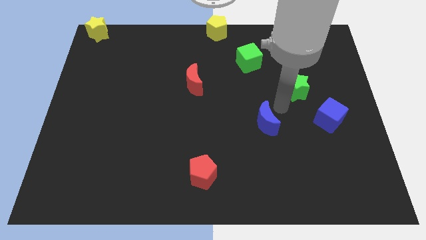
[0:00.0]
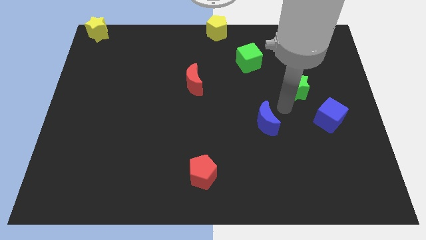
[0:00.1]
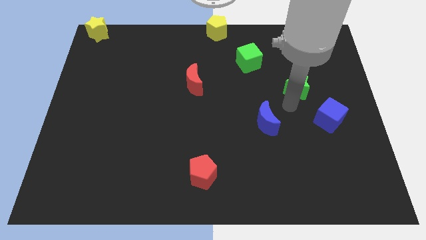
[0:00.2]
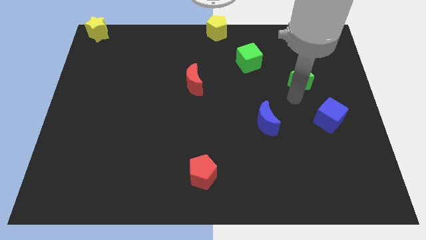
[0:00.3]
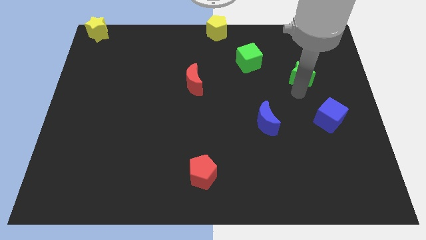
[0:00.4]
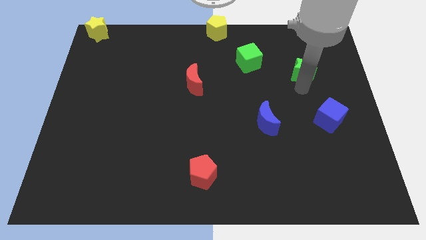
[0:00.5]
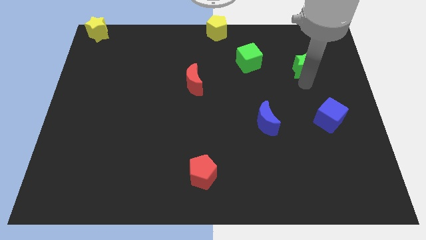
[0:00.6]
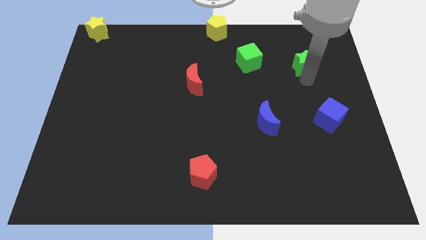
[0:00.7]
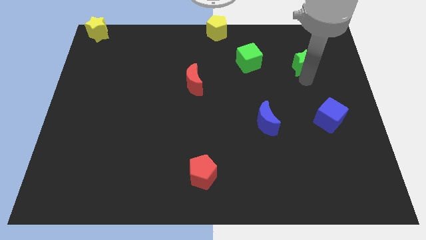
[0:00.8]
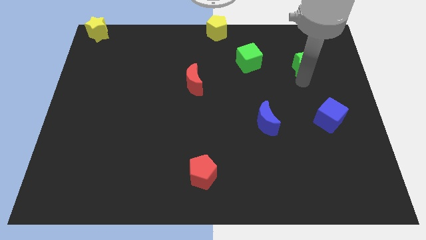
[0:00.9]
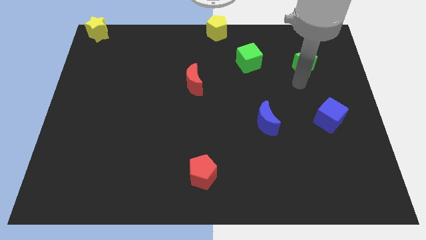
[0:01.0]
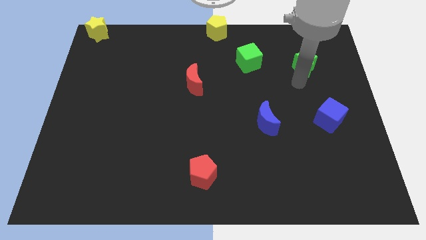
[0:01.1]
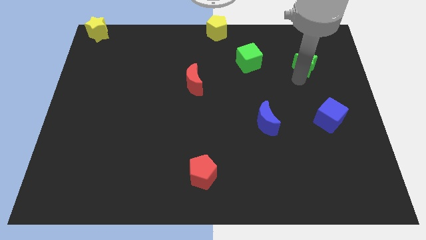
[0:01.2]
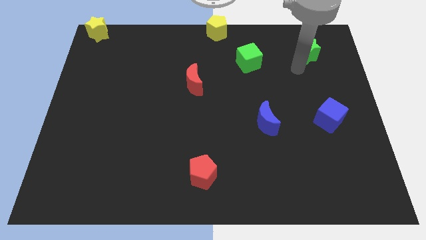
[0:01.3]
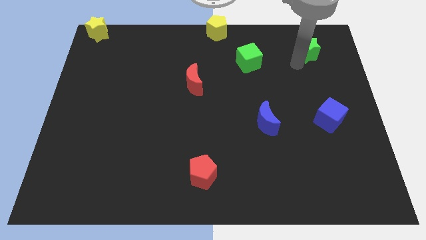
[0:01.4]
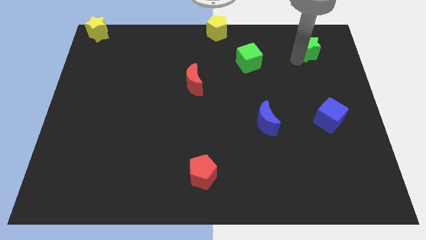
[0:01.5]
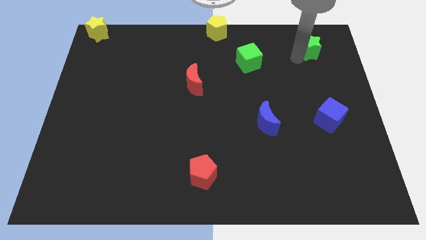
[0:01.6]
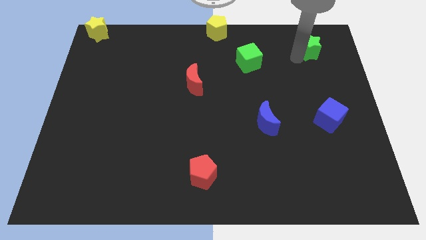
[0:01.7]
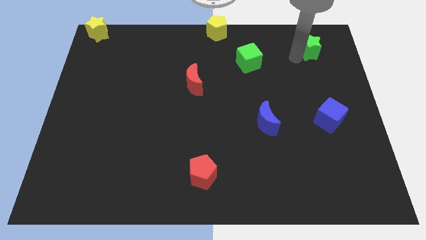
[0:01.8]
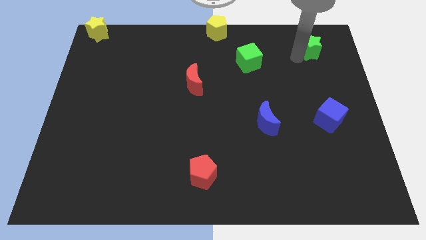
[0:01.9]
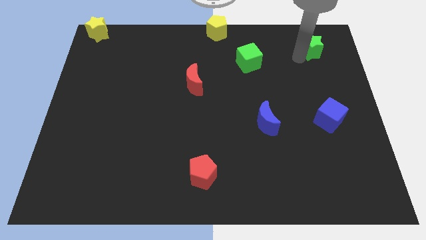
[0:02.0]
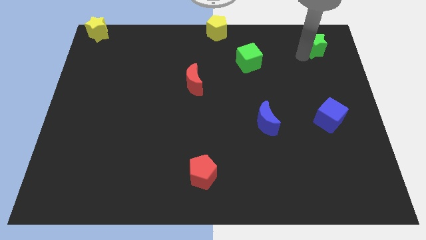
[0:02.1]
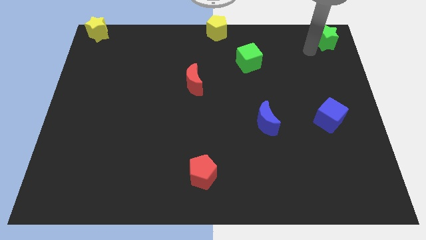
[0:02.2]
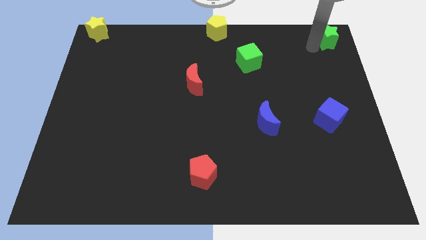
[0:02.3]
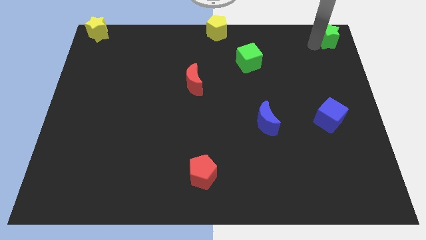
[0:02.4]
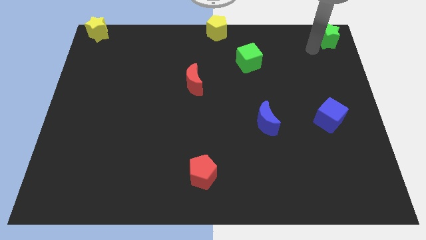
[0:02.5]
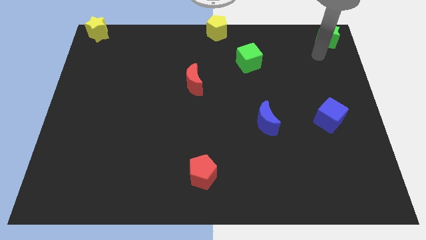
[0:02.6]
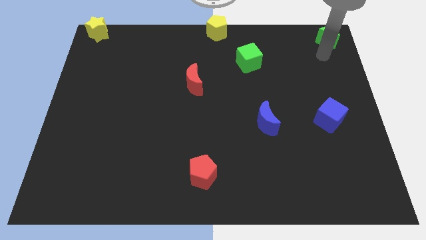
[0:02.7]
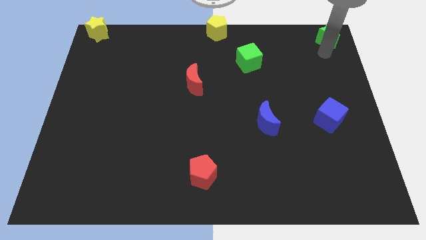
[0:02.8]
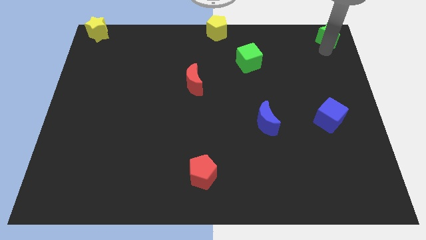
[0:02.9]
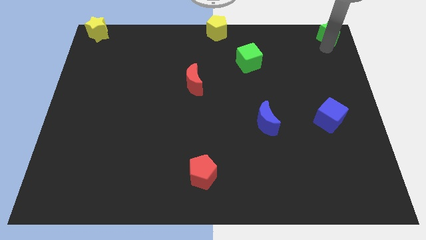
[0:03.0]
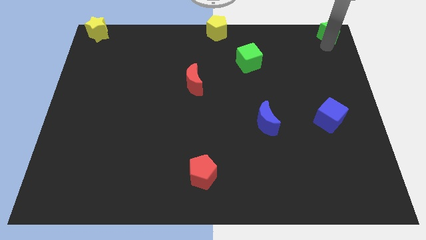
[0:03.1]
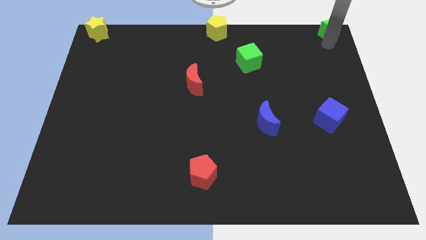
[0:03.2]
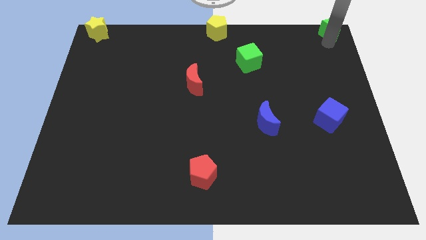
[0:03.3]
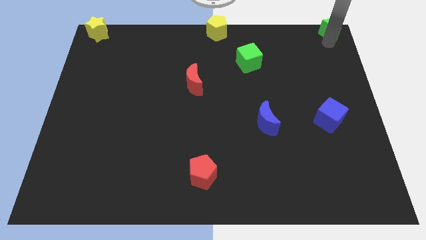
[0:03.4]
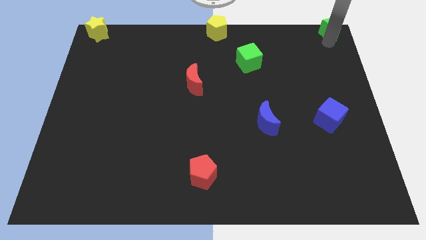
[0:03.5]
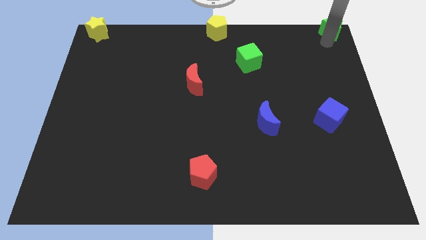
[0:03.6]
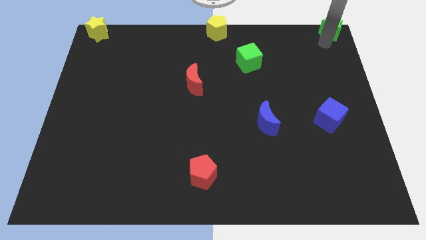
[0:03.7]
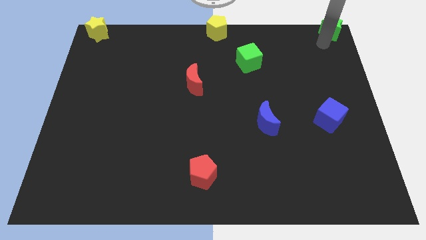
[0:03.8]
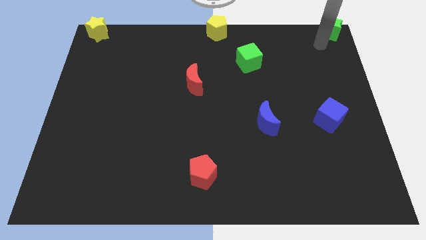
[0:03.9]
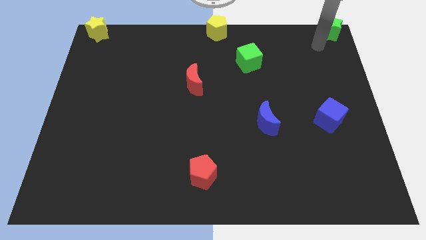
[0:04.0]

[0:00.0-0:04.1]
place the green star at the top right corner of the board

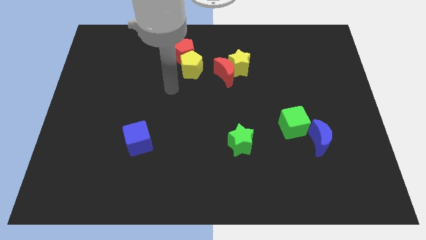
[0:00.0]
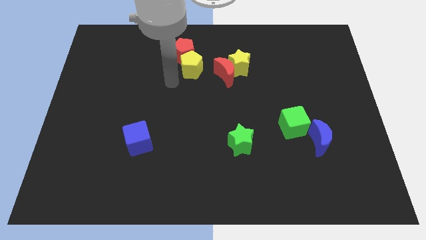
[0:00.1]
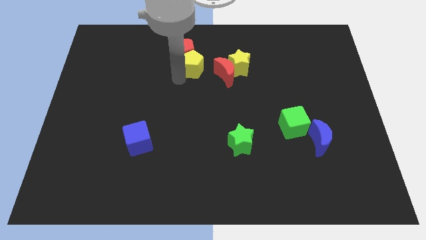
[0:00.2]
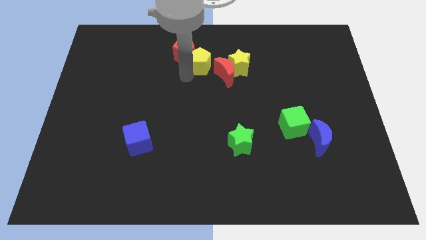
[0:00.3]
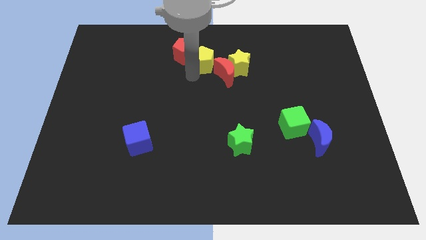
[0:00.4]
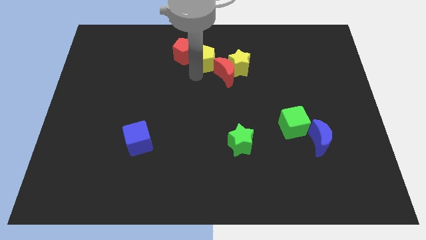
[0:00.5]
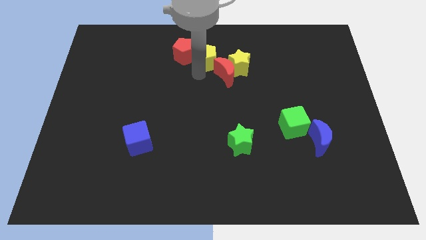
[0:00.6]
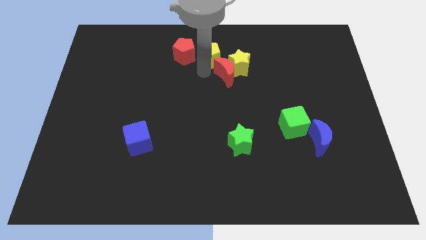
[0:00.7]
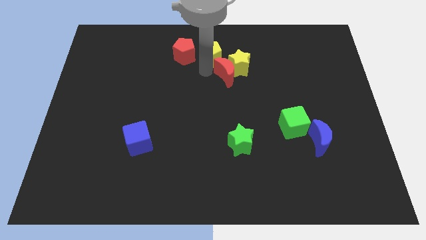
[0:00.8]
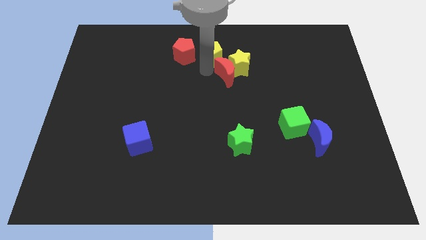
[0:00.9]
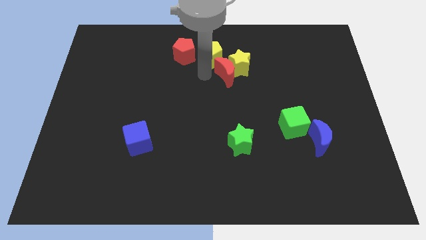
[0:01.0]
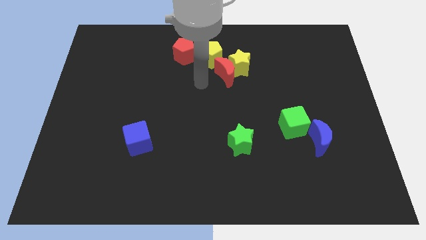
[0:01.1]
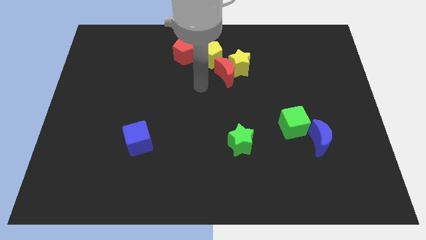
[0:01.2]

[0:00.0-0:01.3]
push yellow pentagon above red crescent

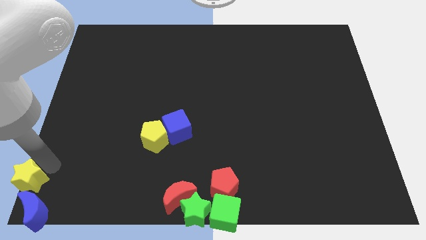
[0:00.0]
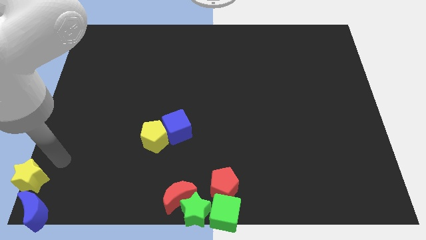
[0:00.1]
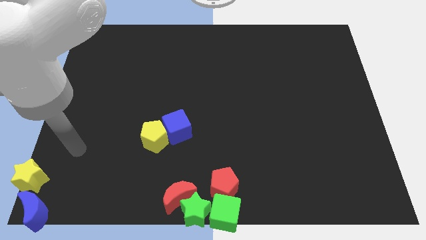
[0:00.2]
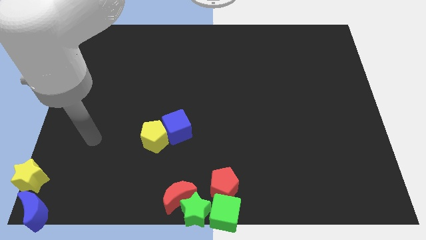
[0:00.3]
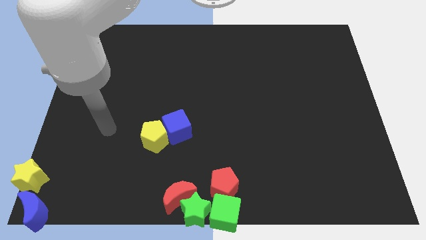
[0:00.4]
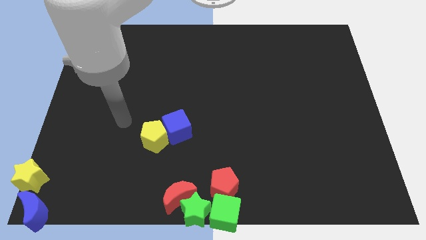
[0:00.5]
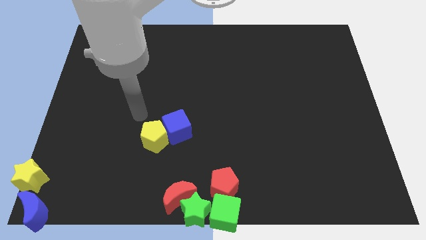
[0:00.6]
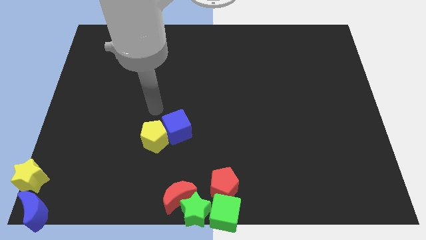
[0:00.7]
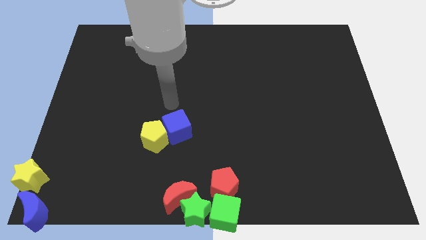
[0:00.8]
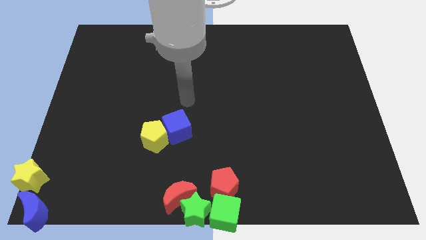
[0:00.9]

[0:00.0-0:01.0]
move the arm away from the yellow star

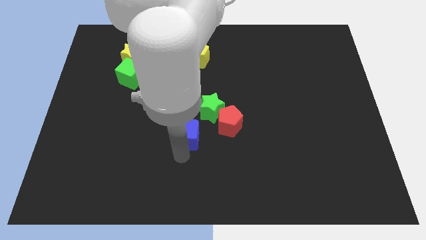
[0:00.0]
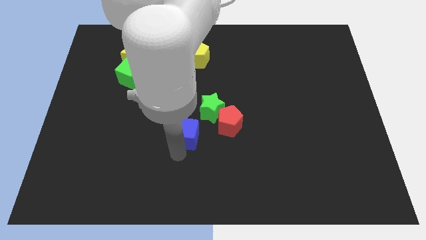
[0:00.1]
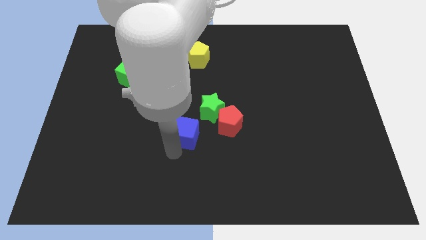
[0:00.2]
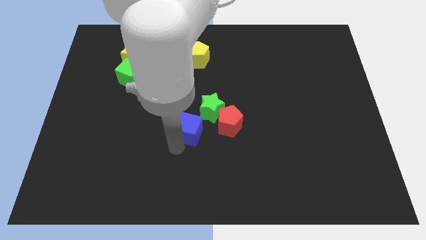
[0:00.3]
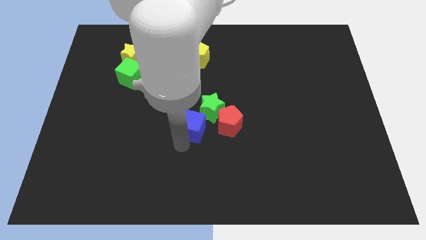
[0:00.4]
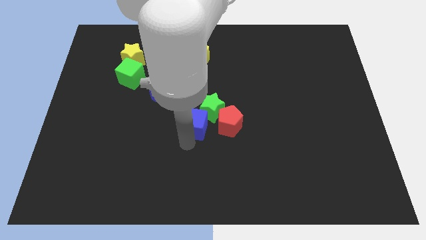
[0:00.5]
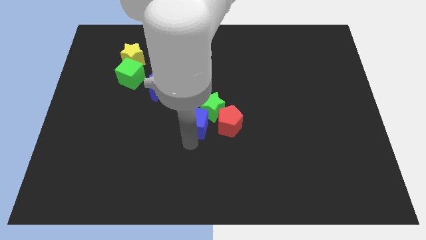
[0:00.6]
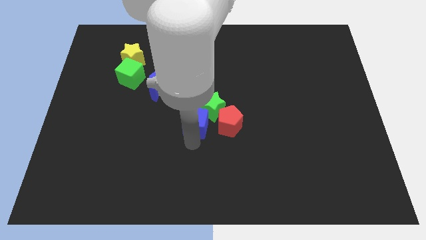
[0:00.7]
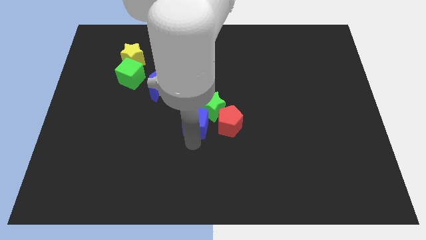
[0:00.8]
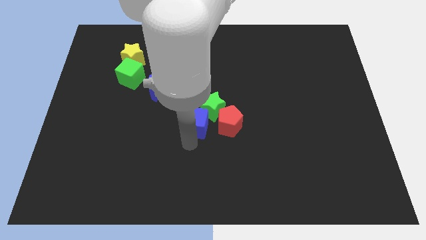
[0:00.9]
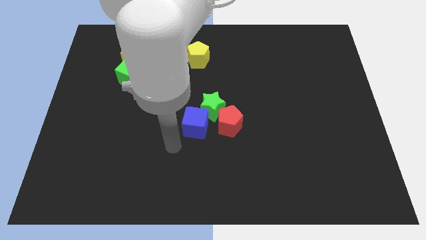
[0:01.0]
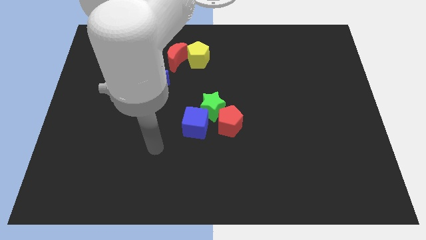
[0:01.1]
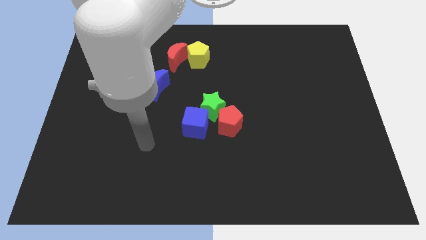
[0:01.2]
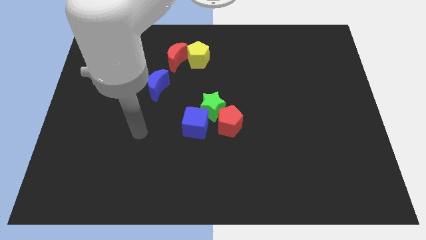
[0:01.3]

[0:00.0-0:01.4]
push the blue cube into the green star

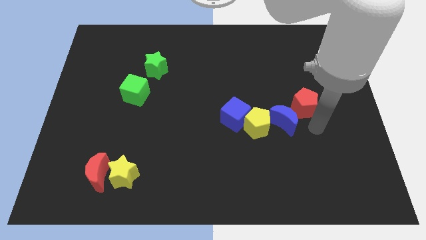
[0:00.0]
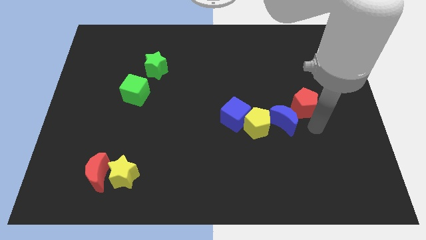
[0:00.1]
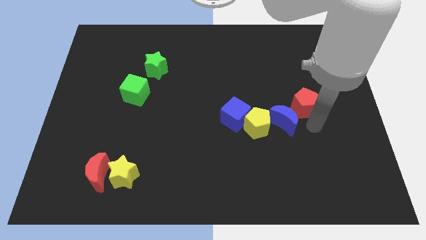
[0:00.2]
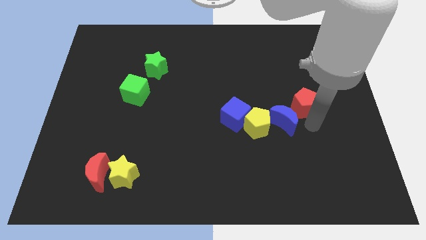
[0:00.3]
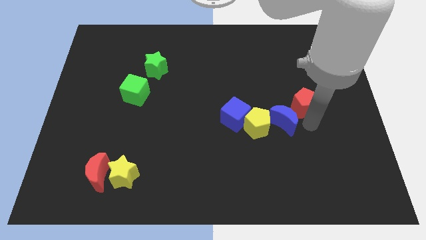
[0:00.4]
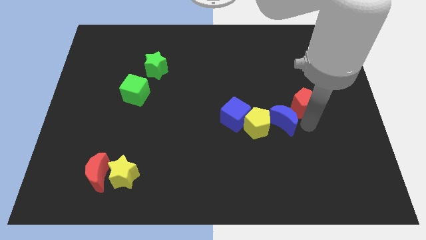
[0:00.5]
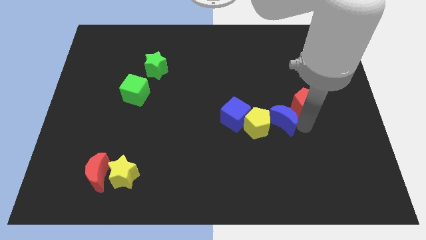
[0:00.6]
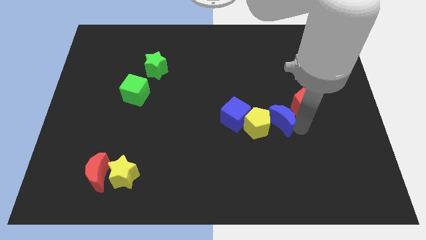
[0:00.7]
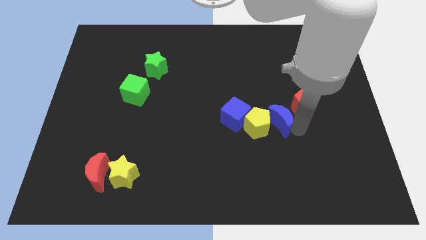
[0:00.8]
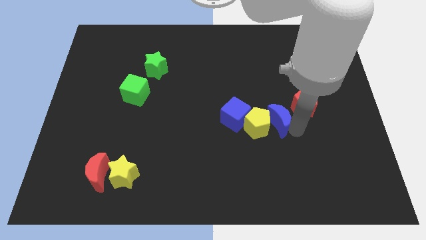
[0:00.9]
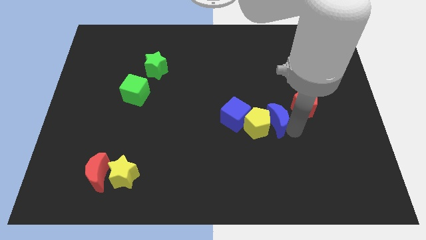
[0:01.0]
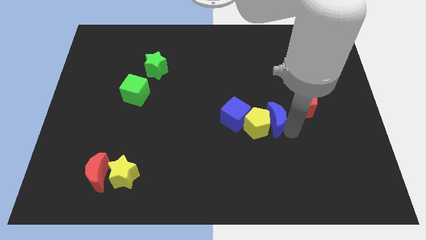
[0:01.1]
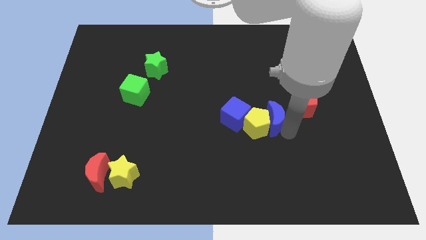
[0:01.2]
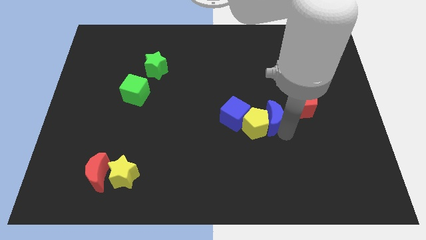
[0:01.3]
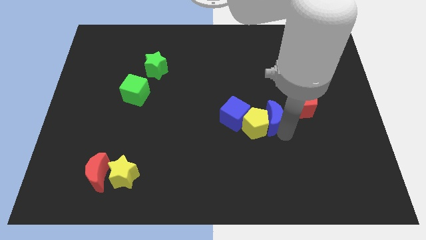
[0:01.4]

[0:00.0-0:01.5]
push the blue crescent into the yellow pentagon
